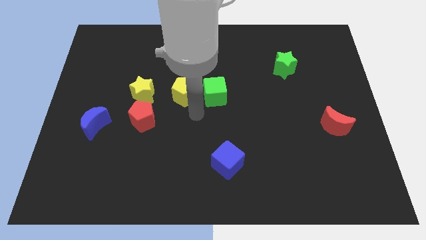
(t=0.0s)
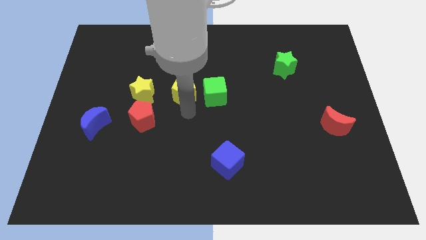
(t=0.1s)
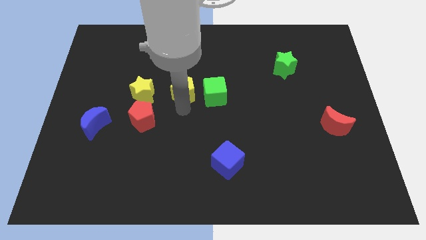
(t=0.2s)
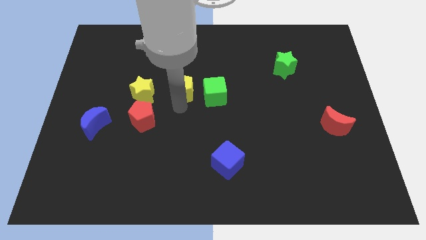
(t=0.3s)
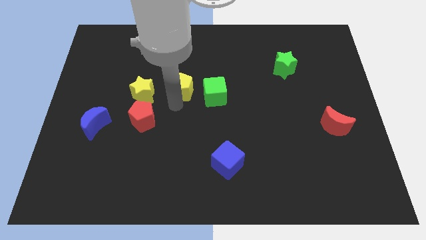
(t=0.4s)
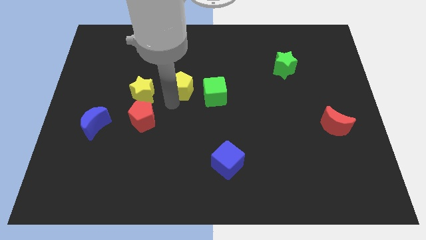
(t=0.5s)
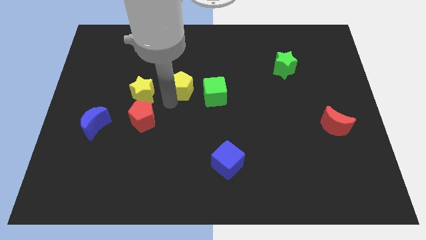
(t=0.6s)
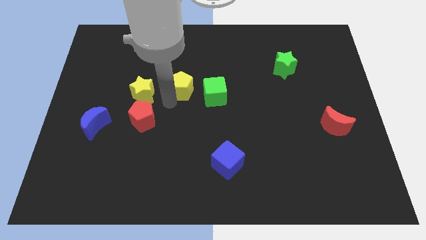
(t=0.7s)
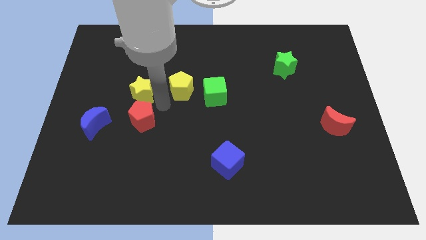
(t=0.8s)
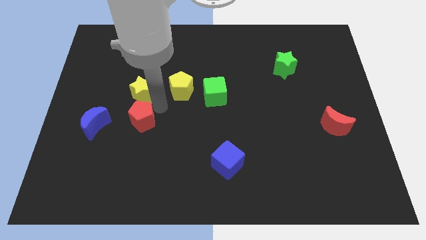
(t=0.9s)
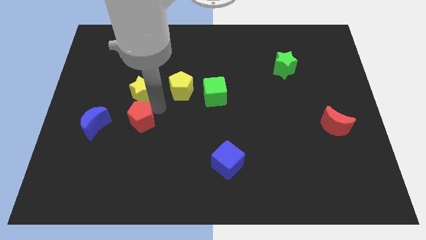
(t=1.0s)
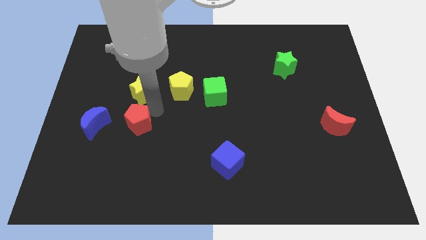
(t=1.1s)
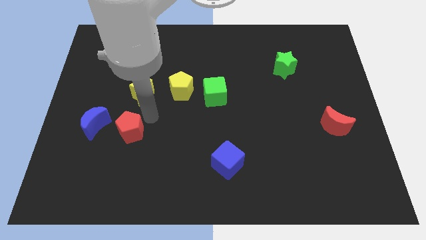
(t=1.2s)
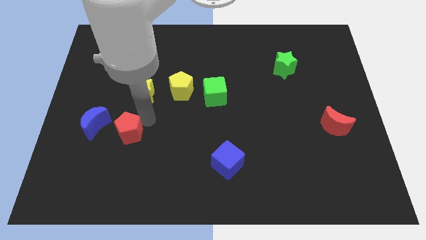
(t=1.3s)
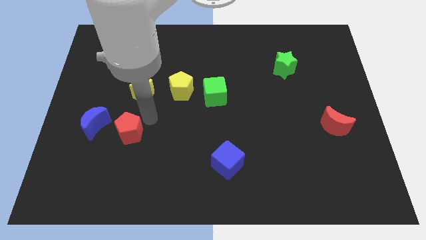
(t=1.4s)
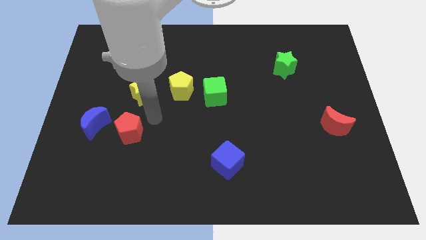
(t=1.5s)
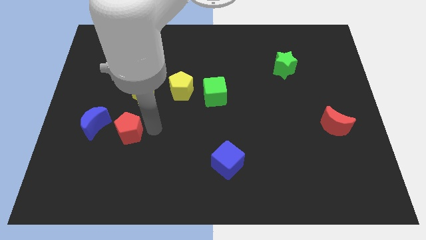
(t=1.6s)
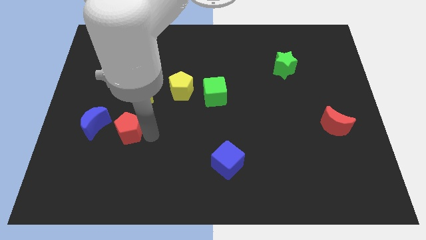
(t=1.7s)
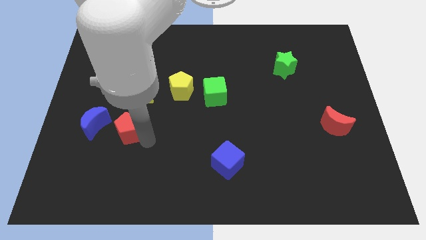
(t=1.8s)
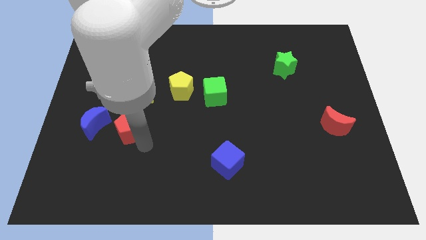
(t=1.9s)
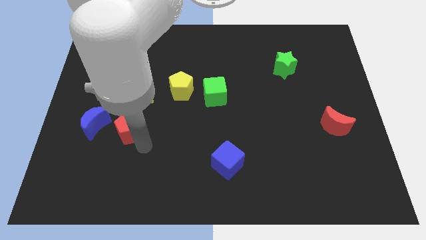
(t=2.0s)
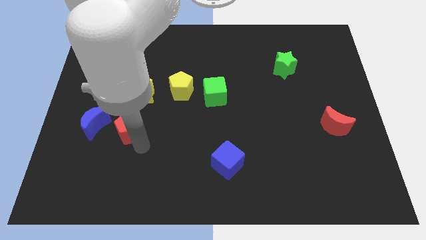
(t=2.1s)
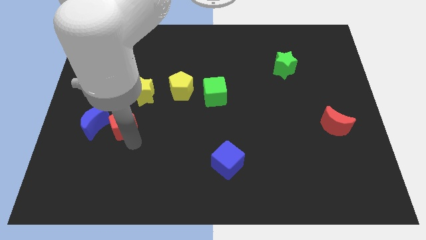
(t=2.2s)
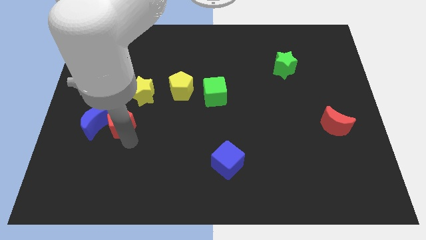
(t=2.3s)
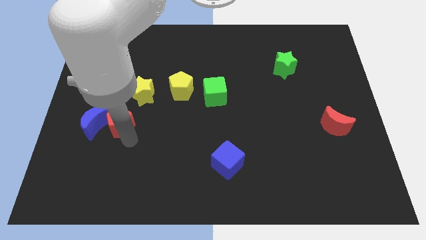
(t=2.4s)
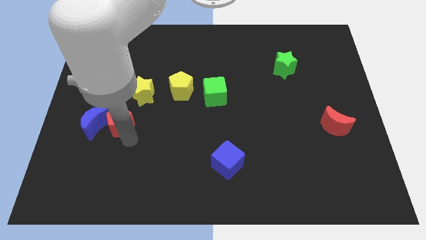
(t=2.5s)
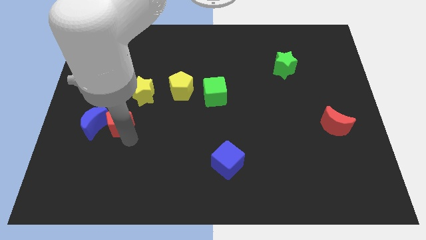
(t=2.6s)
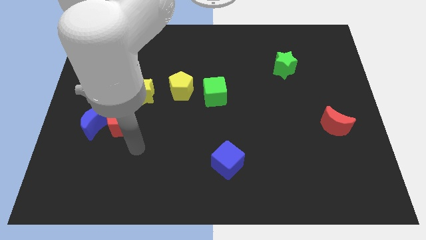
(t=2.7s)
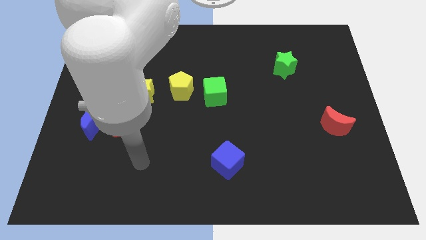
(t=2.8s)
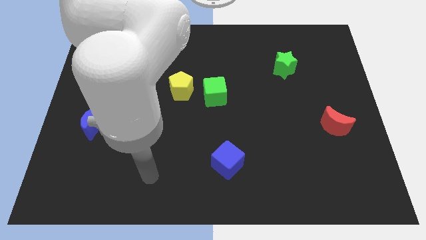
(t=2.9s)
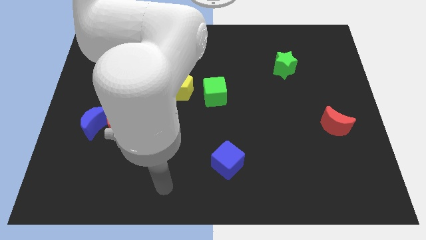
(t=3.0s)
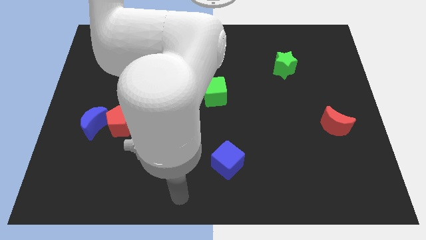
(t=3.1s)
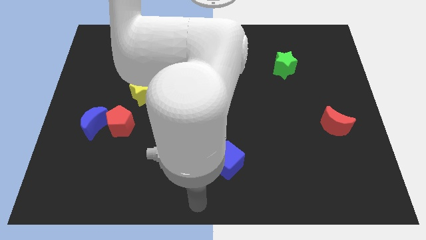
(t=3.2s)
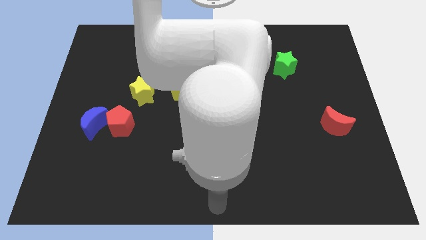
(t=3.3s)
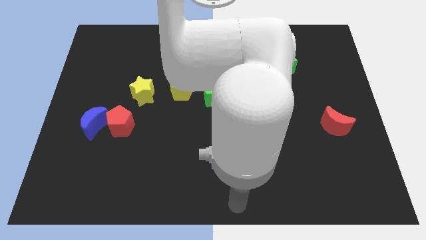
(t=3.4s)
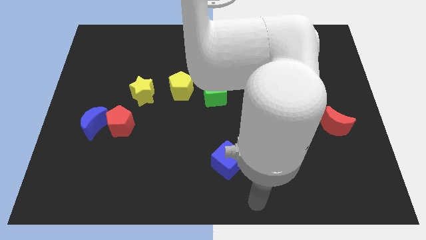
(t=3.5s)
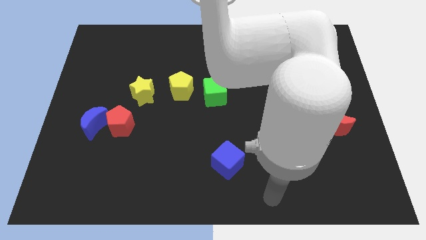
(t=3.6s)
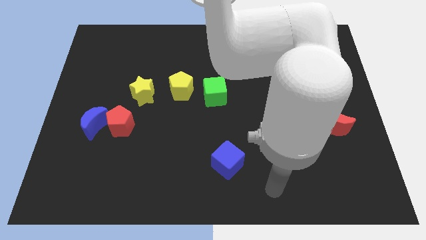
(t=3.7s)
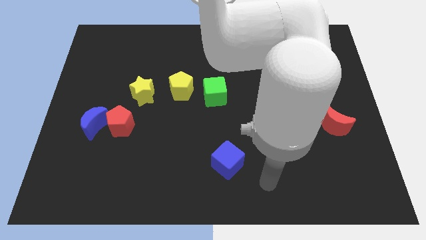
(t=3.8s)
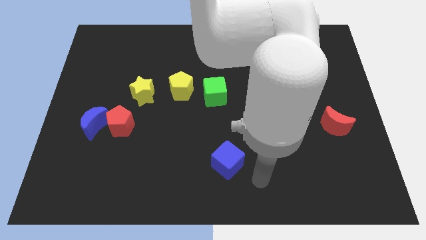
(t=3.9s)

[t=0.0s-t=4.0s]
place the red pentagon to the right of blue moon

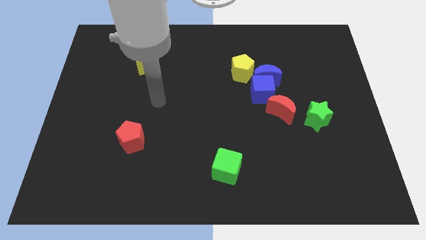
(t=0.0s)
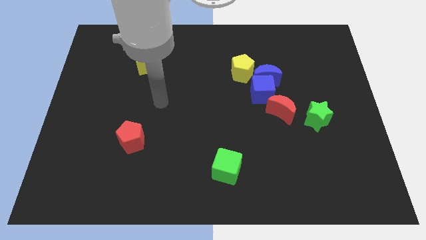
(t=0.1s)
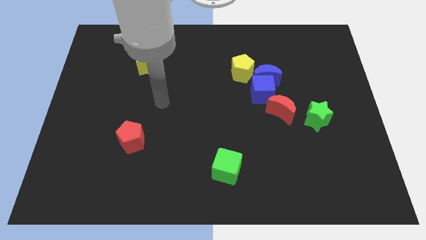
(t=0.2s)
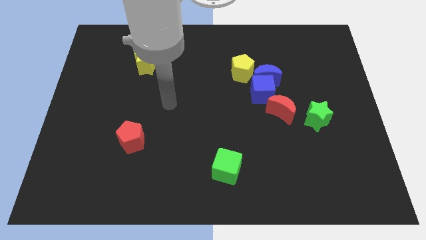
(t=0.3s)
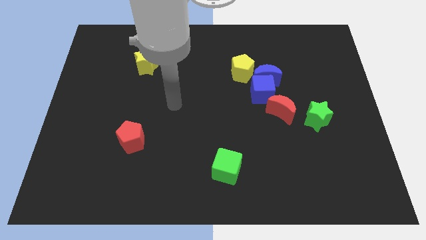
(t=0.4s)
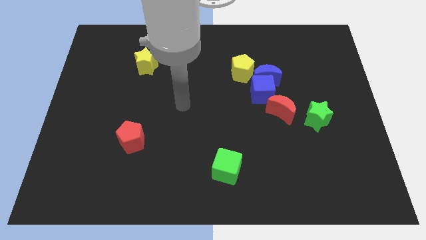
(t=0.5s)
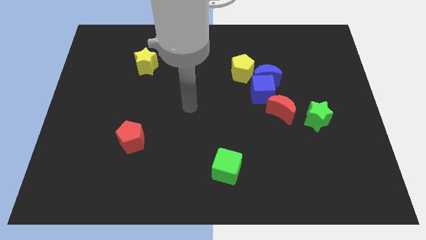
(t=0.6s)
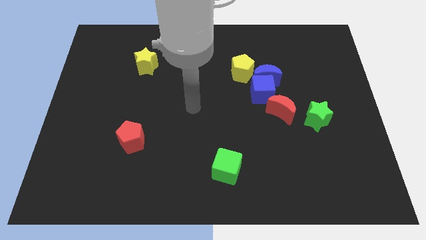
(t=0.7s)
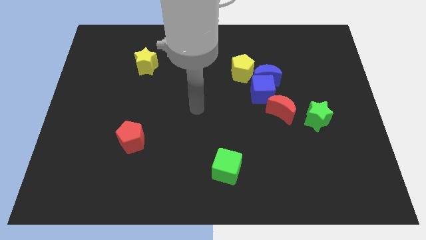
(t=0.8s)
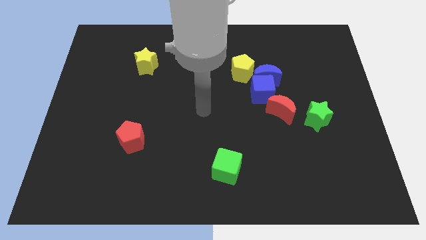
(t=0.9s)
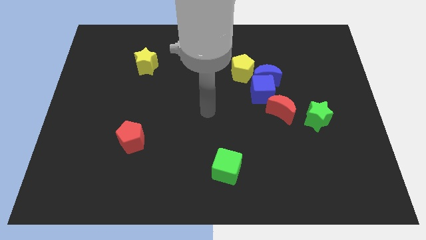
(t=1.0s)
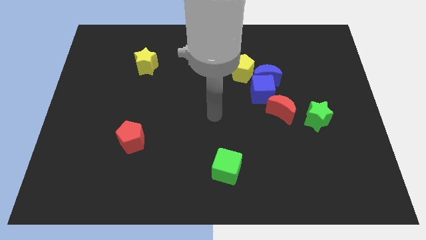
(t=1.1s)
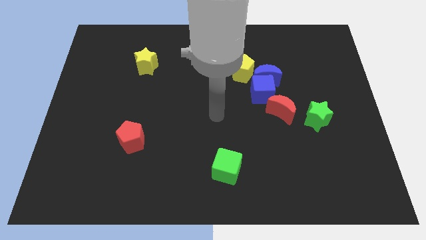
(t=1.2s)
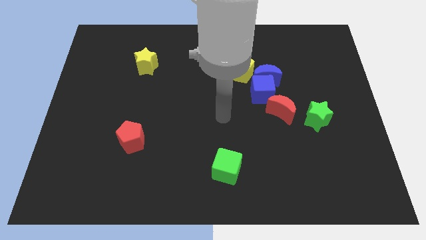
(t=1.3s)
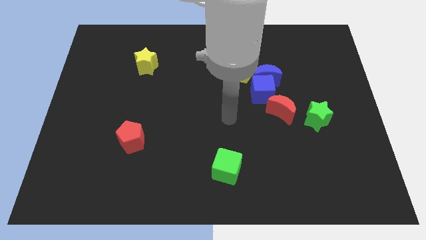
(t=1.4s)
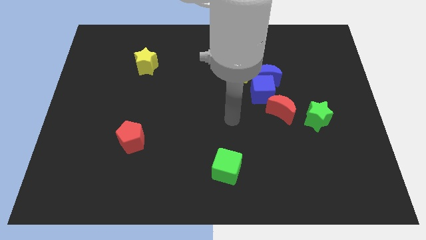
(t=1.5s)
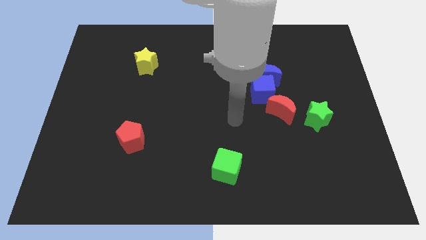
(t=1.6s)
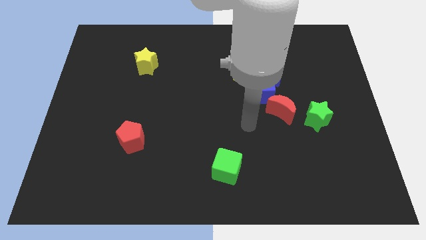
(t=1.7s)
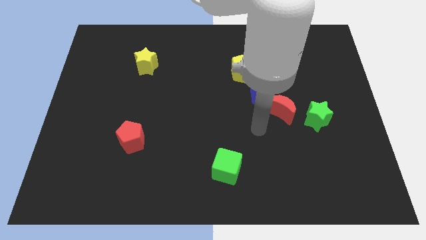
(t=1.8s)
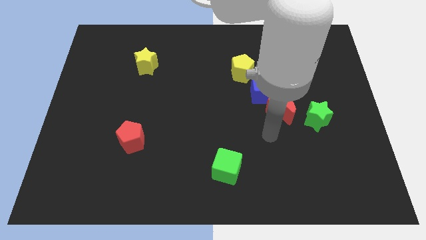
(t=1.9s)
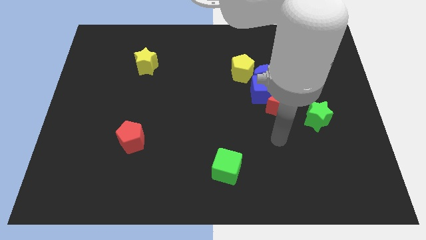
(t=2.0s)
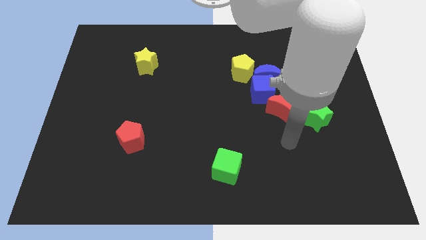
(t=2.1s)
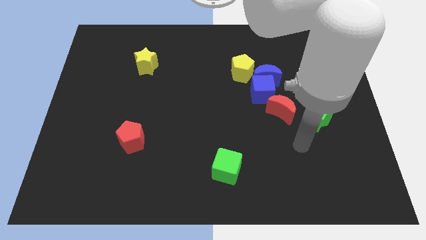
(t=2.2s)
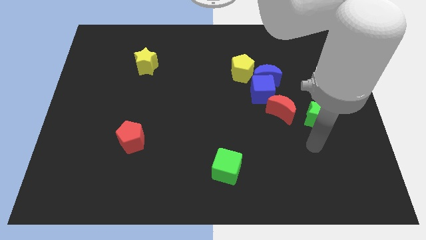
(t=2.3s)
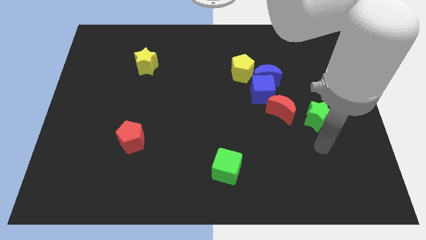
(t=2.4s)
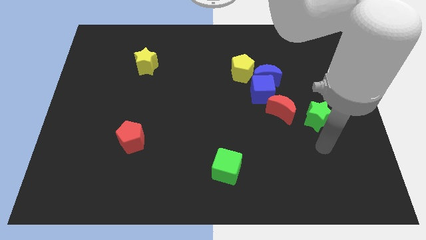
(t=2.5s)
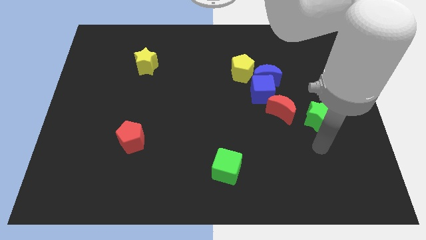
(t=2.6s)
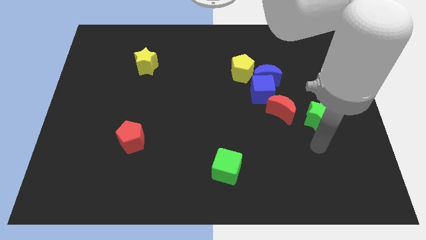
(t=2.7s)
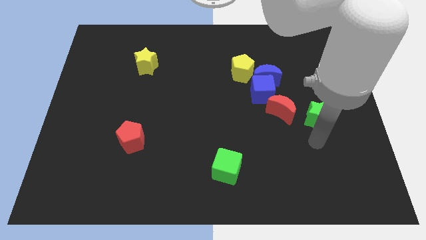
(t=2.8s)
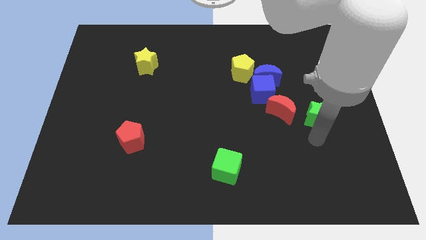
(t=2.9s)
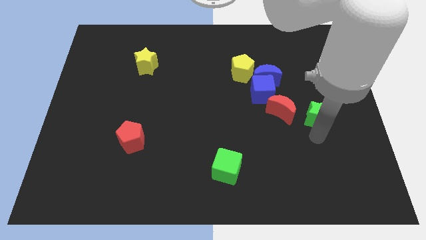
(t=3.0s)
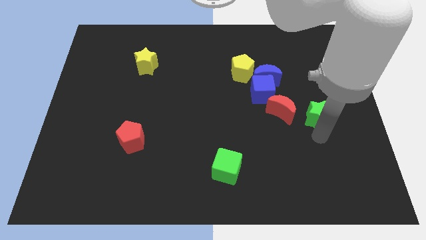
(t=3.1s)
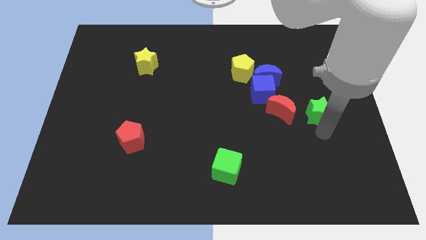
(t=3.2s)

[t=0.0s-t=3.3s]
go and touch the bottom of the green star

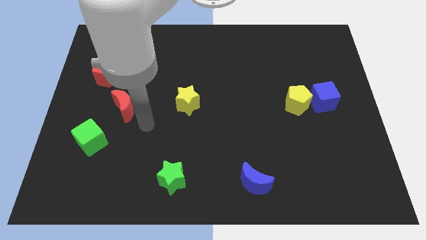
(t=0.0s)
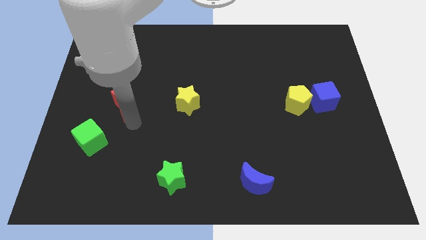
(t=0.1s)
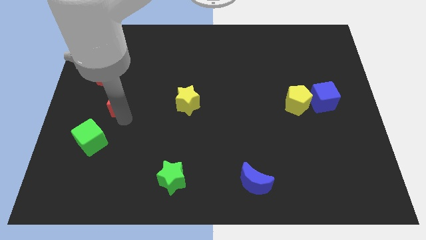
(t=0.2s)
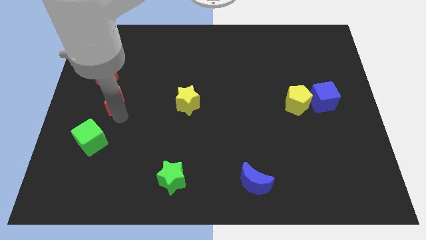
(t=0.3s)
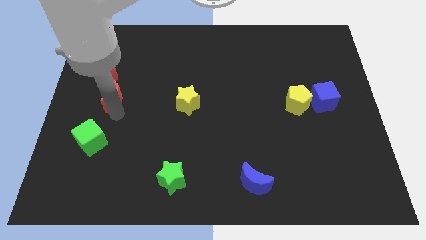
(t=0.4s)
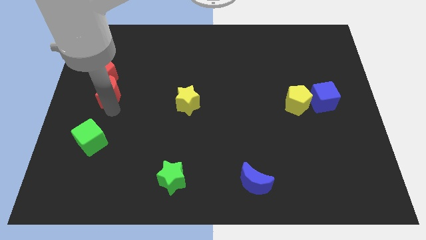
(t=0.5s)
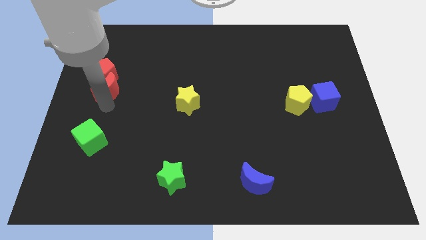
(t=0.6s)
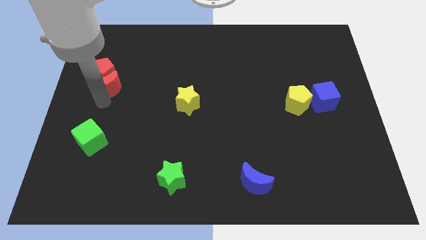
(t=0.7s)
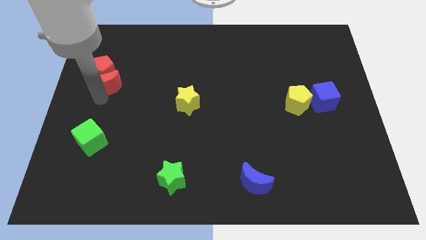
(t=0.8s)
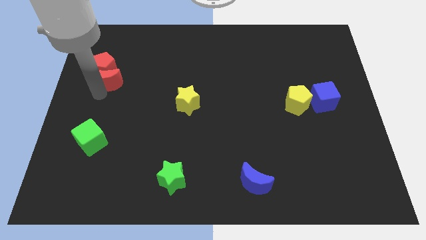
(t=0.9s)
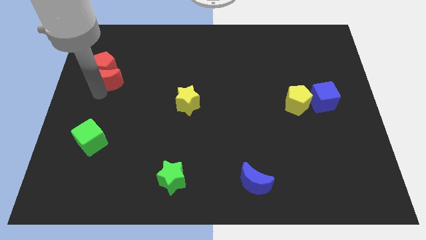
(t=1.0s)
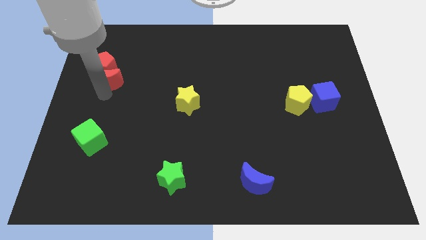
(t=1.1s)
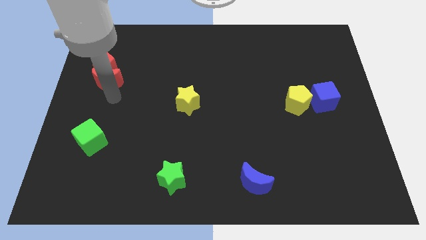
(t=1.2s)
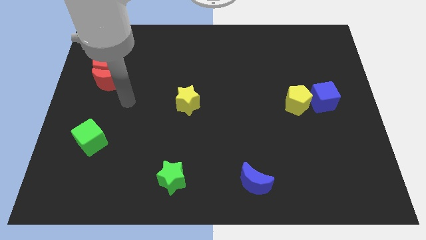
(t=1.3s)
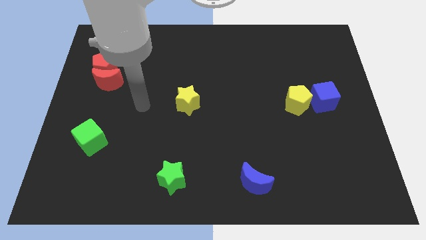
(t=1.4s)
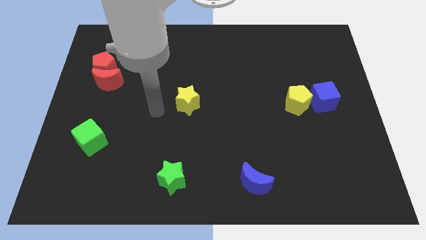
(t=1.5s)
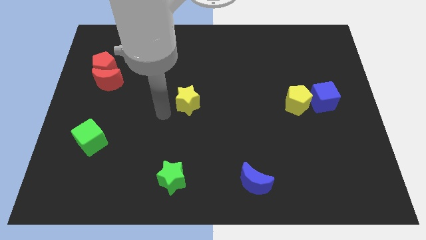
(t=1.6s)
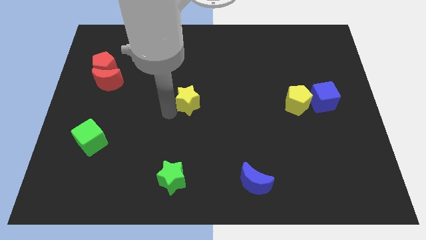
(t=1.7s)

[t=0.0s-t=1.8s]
push the red moon into the red pentagon
